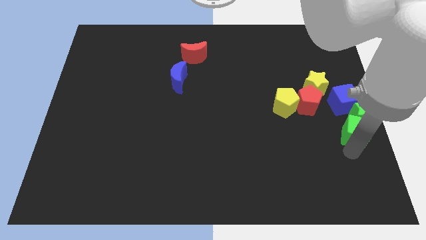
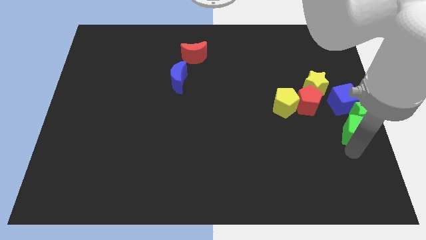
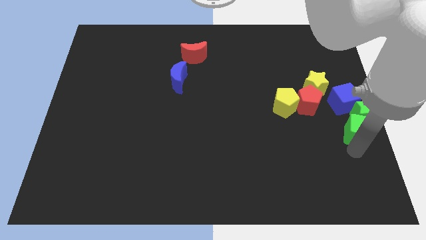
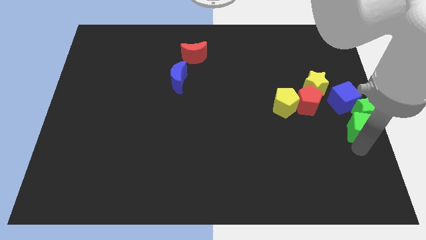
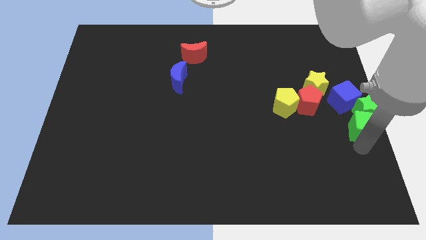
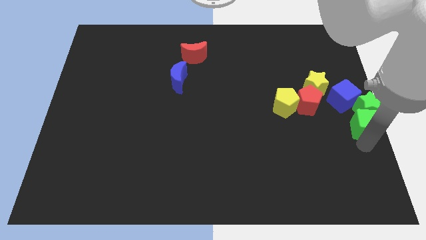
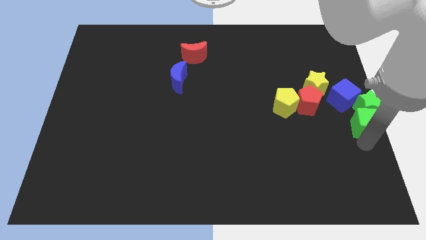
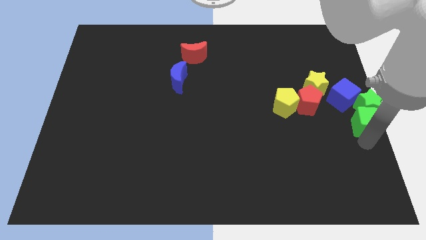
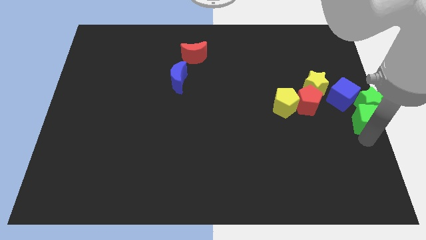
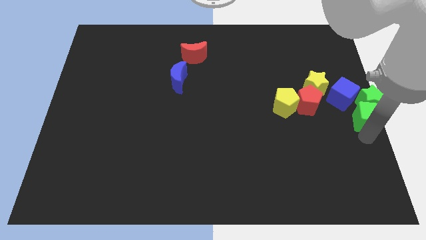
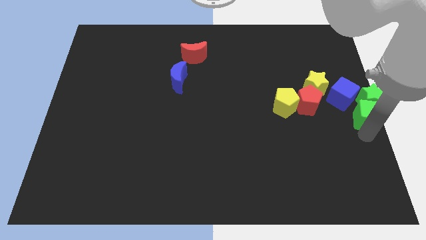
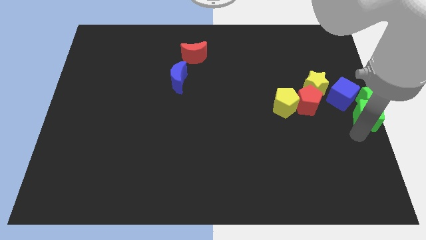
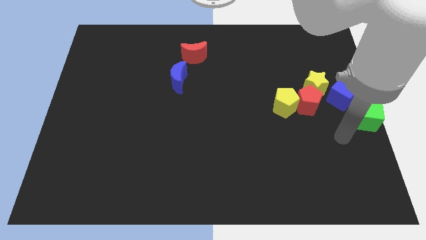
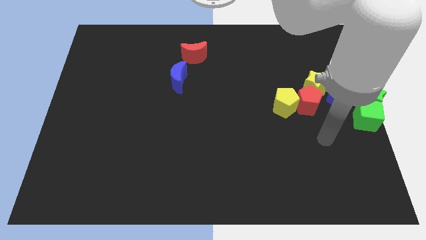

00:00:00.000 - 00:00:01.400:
place the green star and green cube at the right center of the board

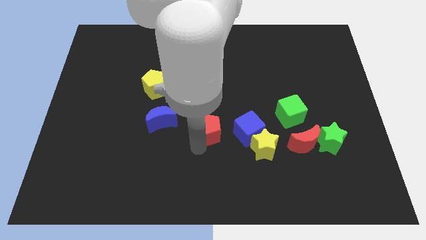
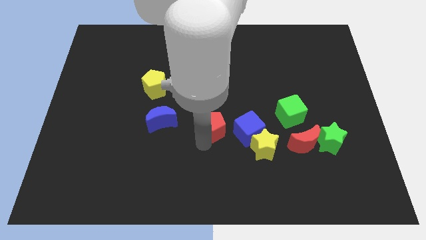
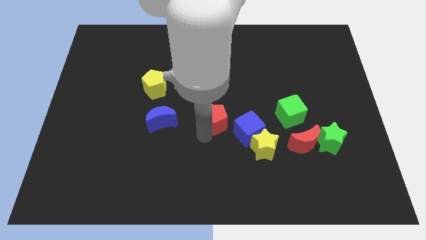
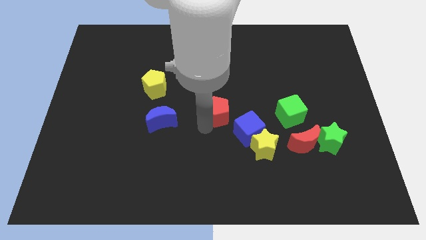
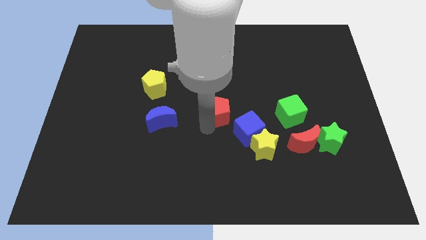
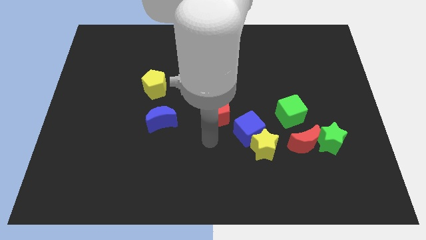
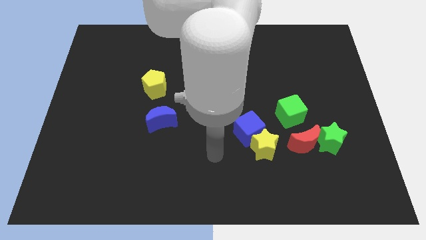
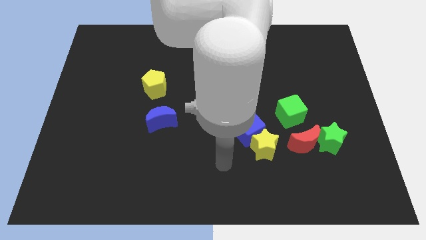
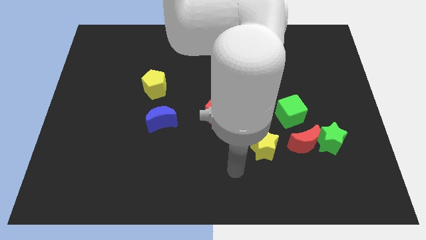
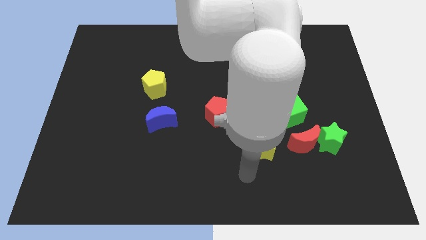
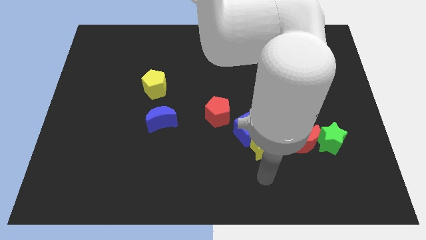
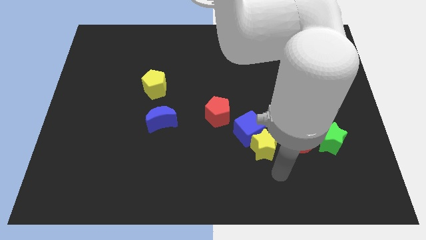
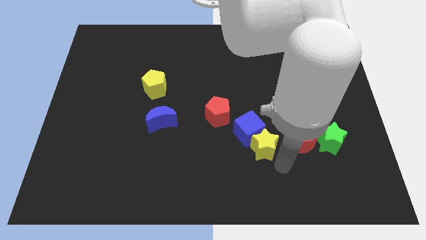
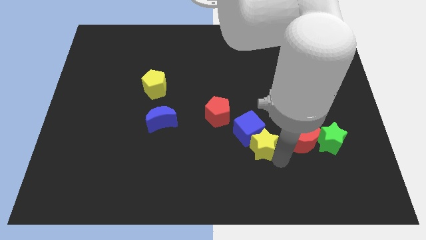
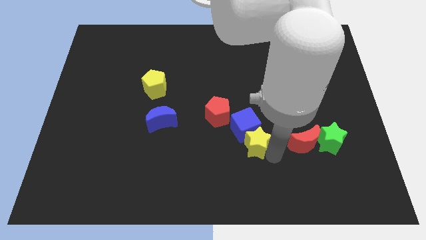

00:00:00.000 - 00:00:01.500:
touch the bottom side of the yellow star

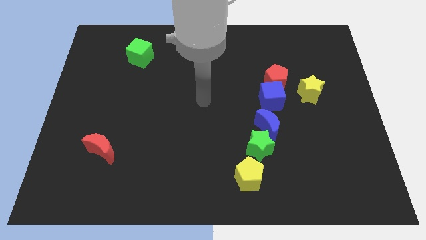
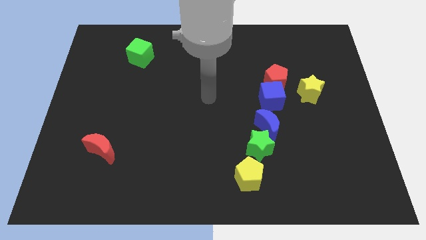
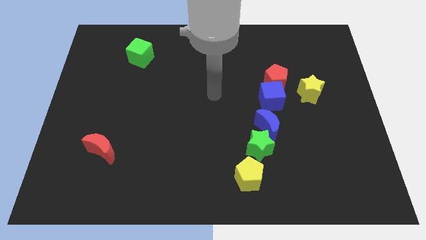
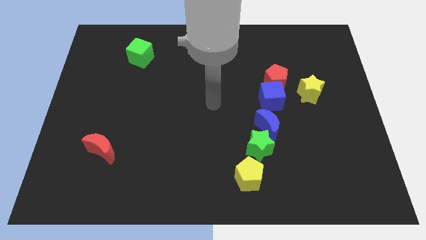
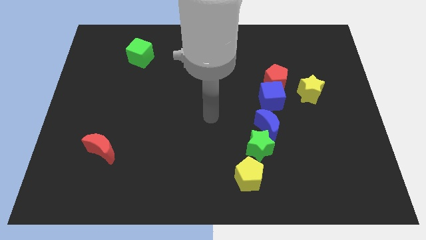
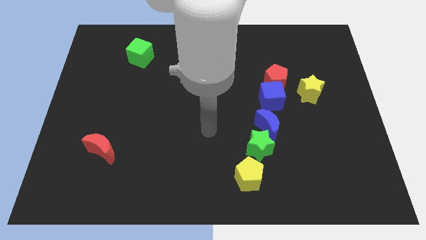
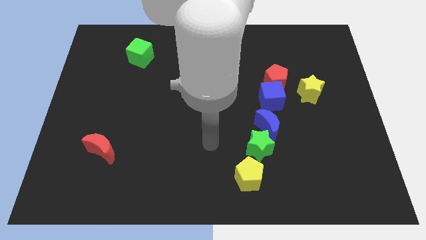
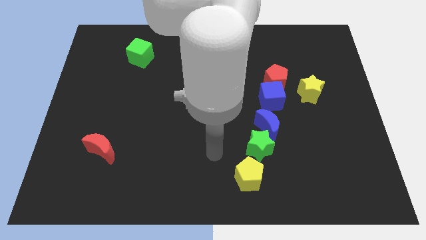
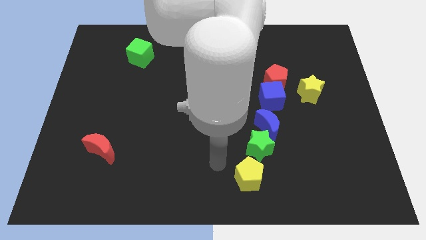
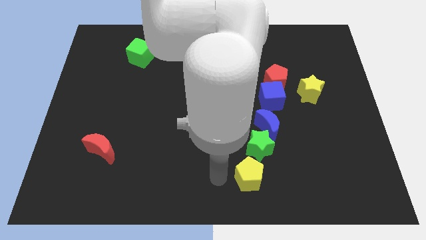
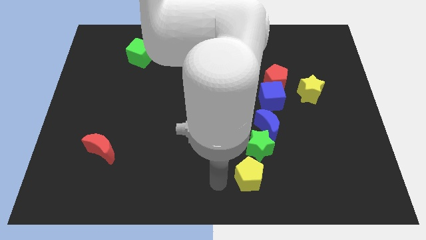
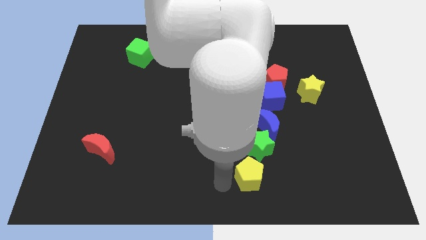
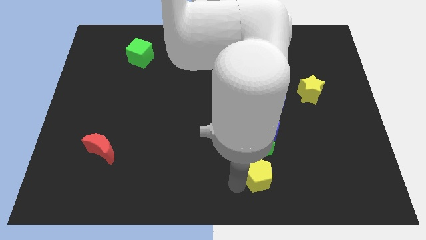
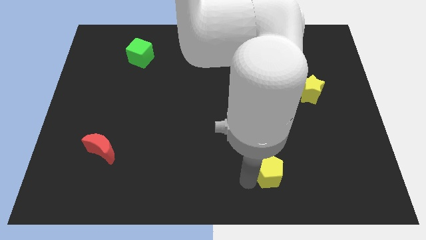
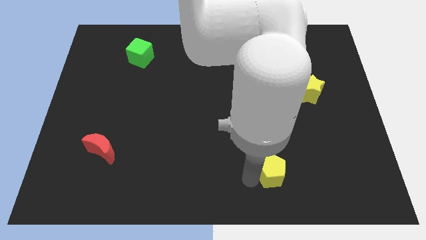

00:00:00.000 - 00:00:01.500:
move arm near yellow pentagon

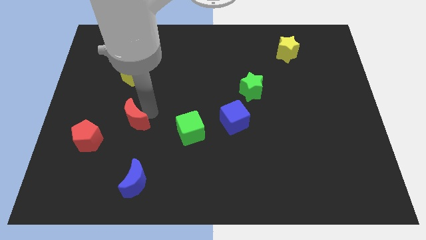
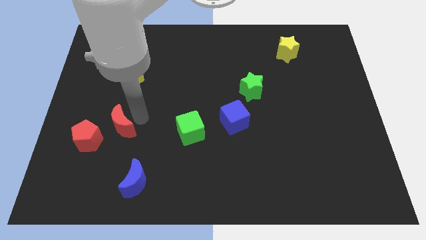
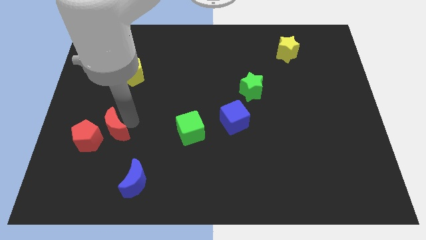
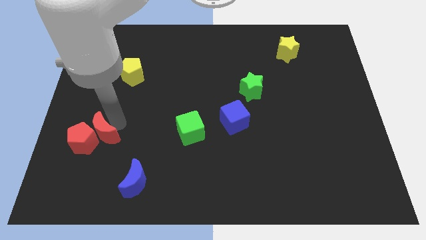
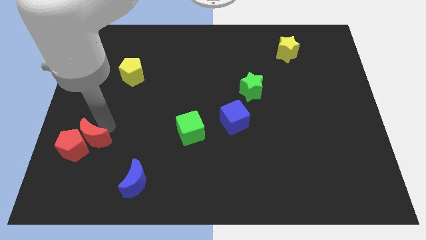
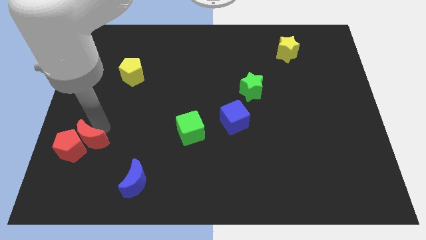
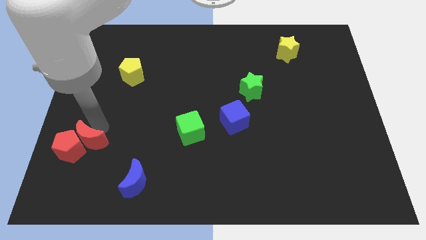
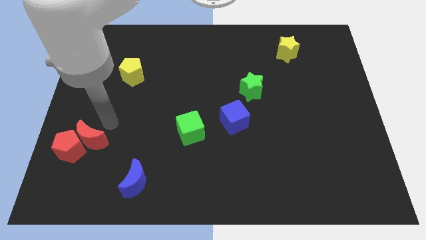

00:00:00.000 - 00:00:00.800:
push the red crescent to the right of the red pentagon

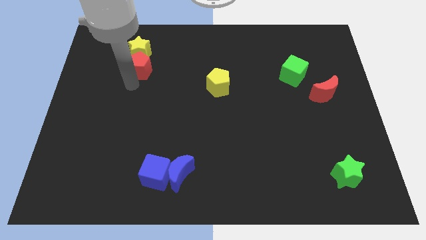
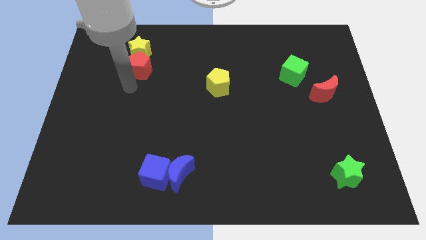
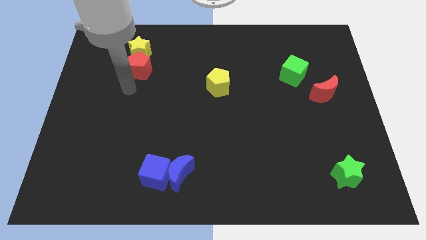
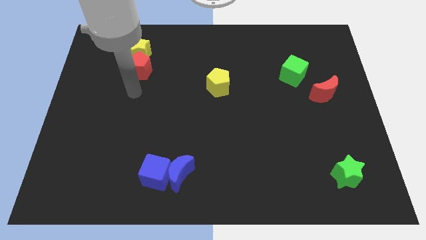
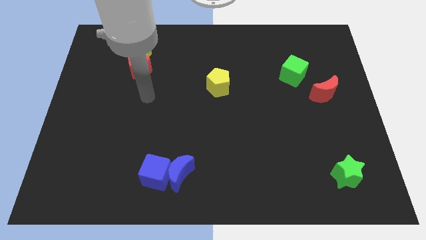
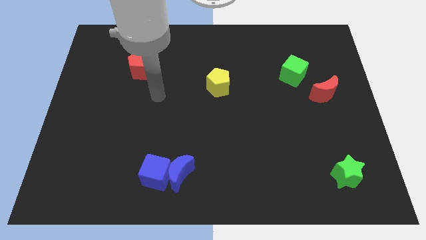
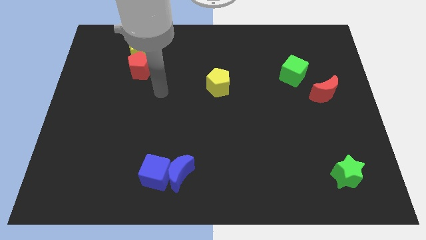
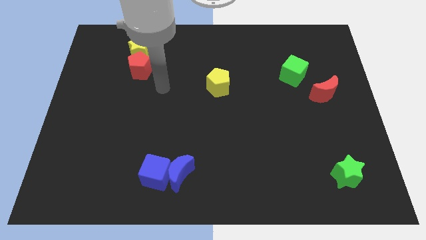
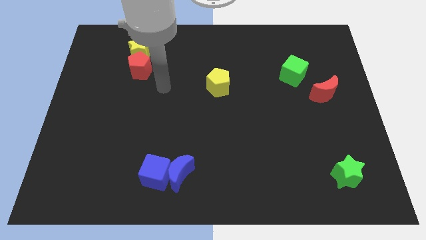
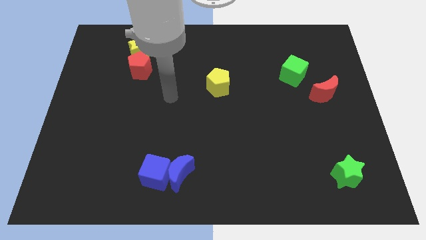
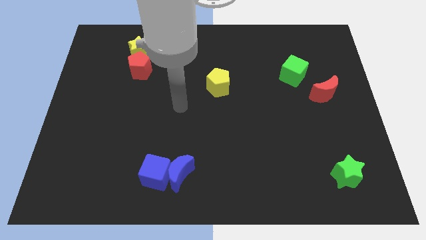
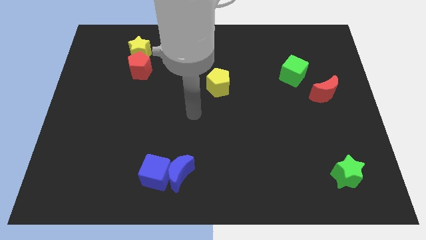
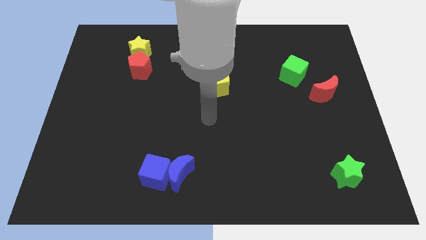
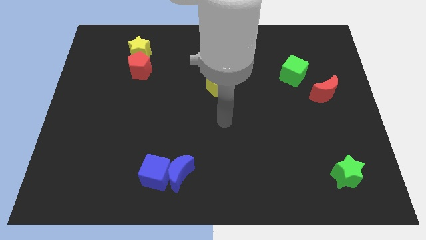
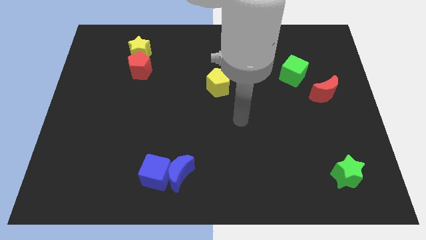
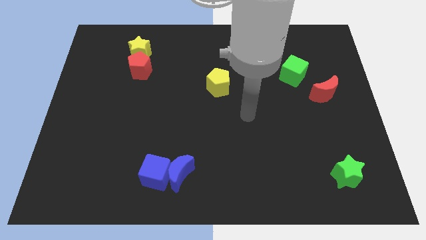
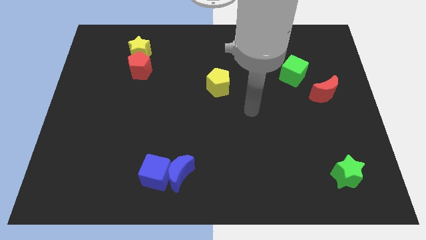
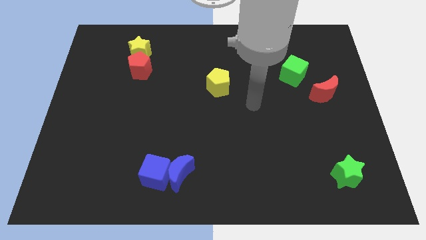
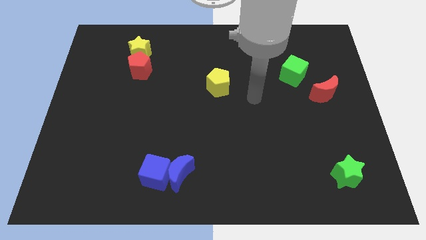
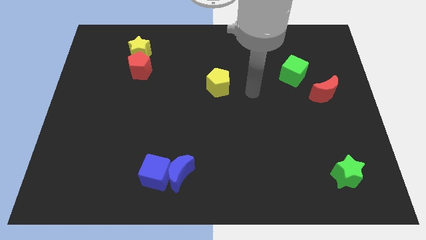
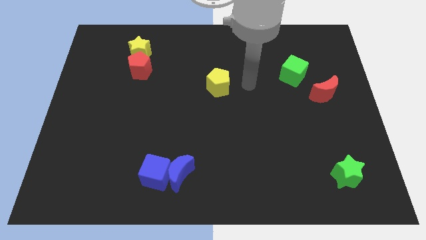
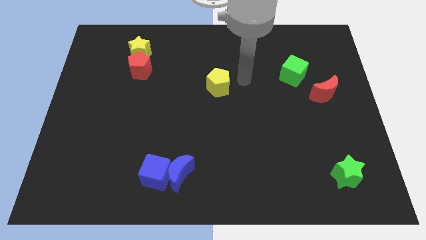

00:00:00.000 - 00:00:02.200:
move your arm and point to the left of yellow pentagon

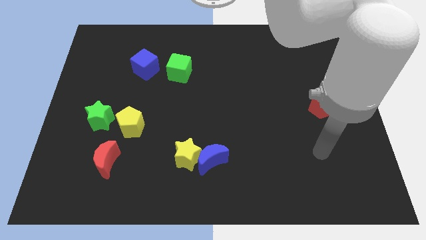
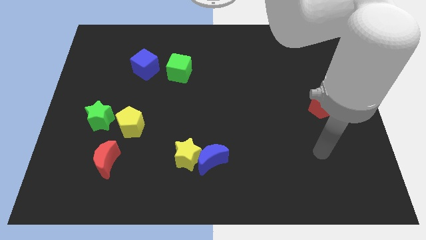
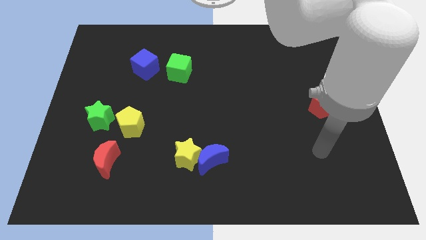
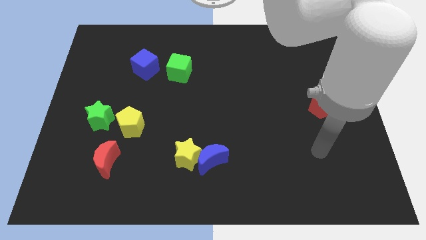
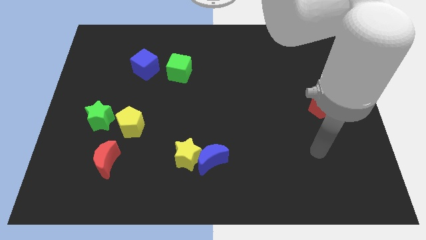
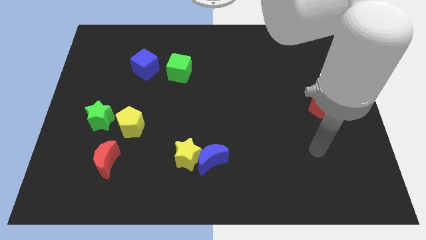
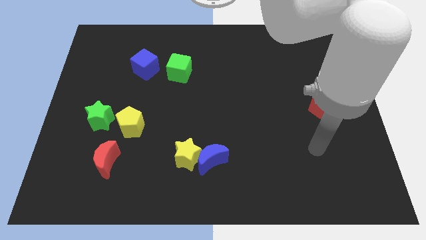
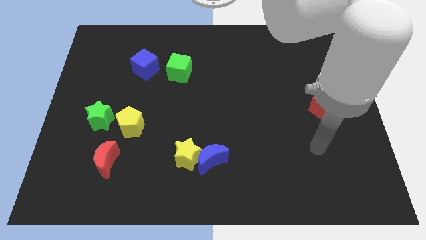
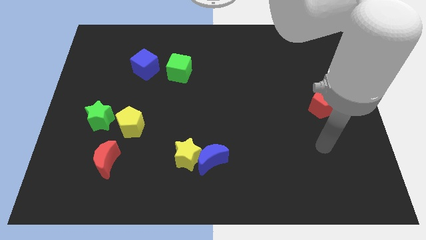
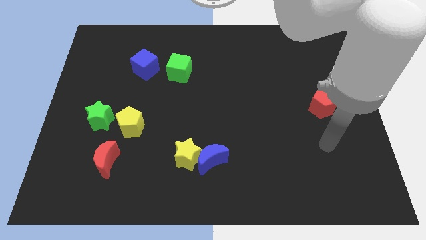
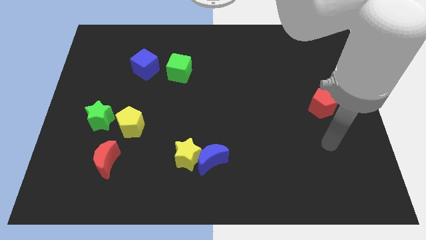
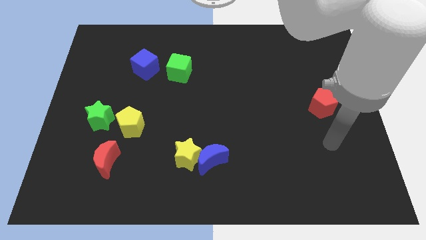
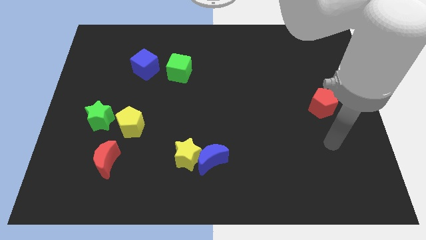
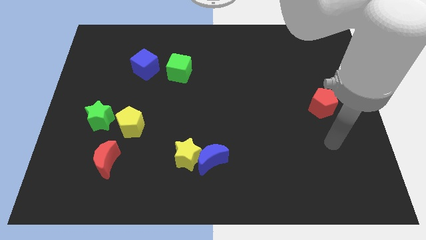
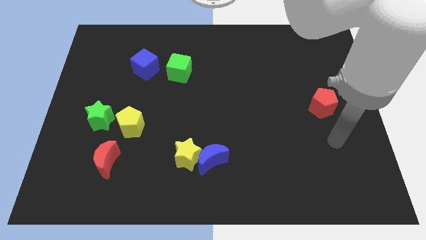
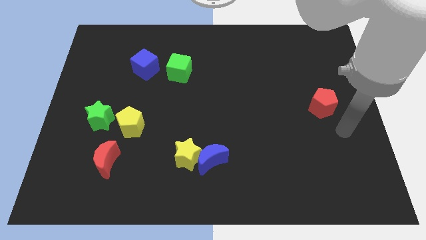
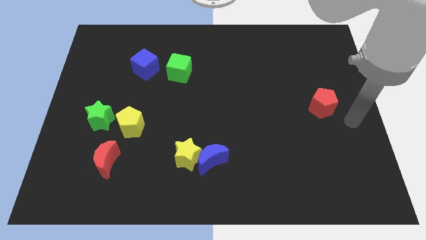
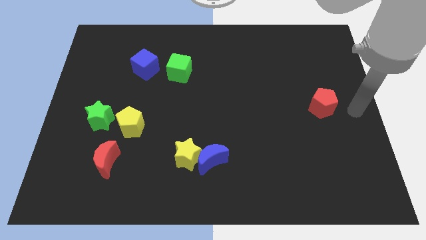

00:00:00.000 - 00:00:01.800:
move the arm towards the right side of the red pentagon
